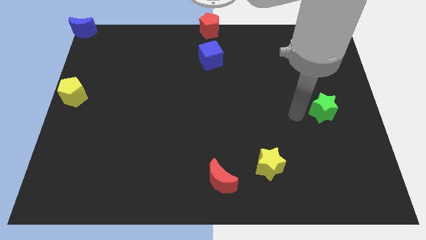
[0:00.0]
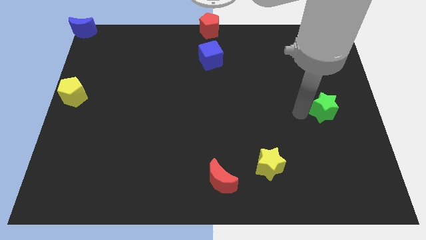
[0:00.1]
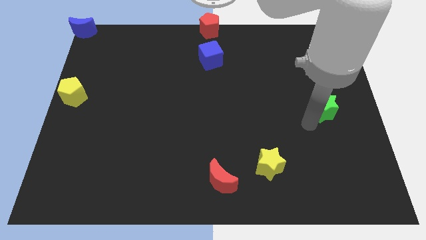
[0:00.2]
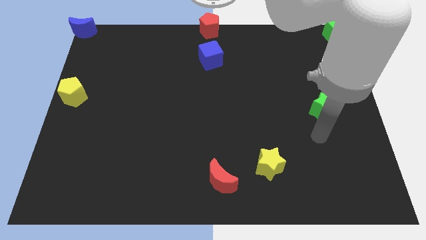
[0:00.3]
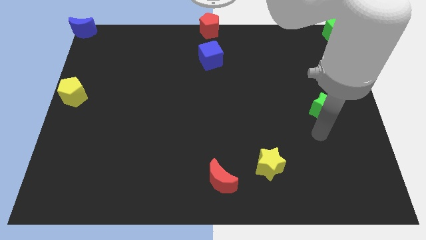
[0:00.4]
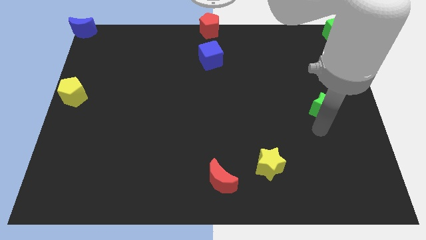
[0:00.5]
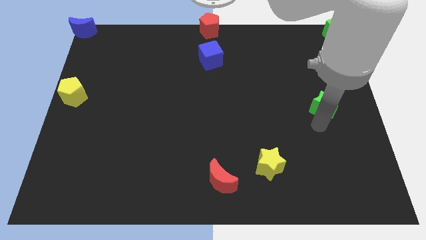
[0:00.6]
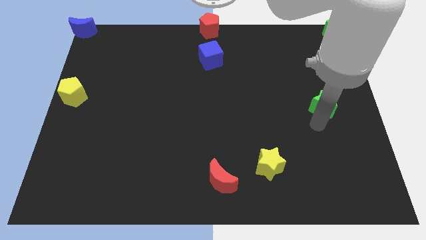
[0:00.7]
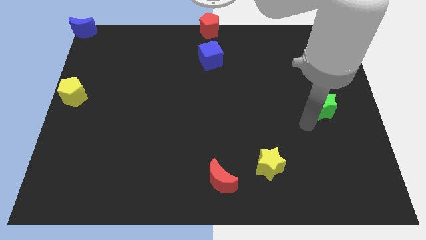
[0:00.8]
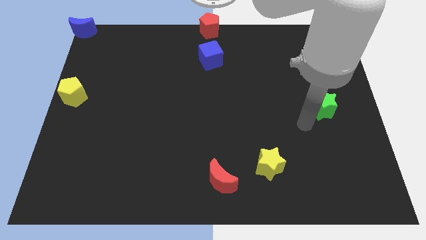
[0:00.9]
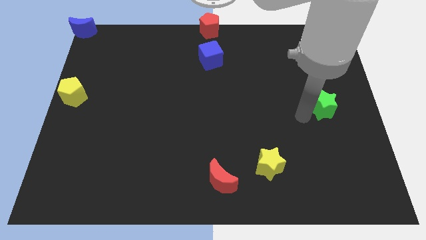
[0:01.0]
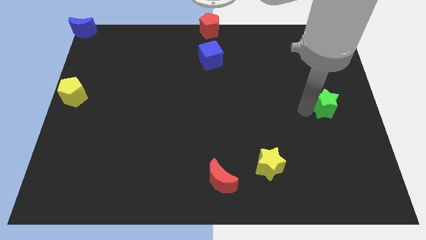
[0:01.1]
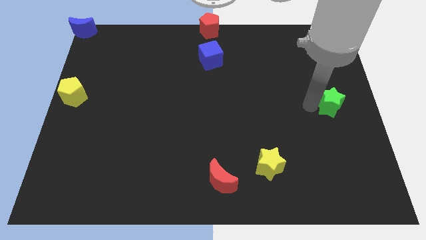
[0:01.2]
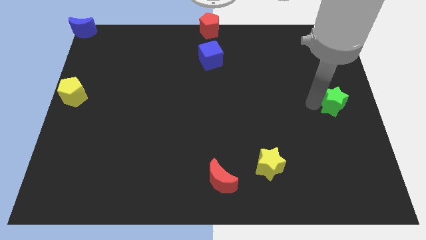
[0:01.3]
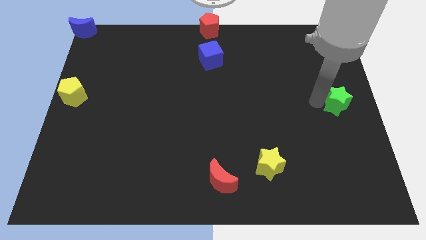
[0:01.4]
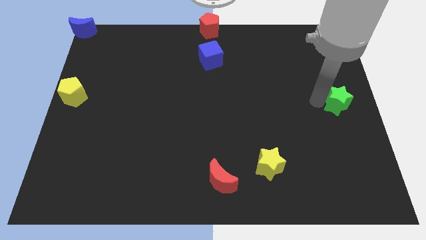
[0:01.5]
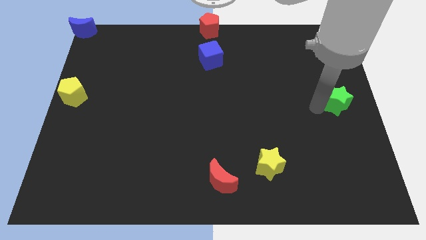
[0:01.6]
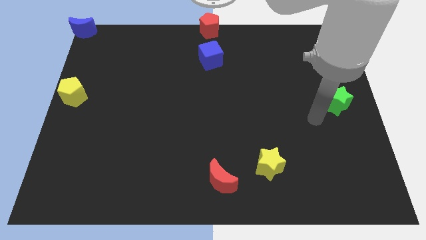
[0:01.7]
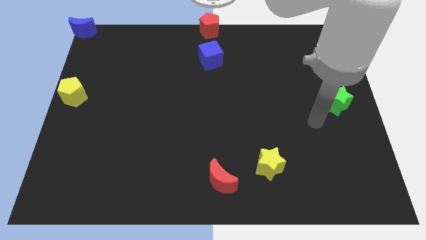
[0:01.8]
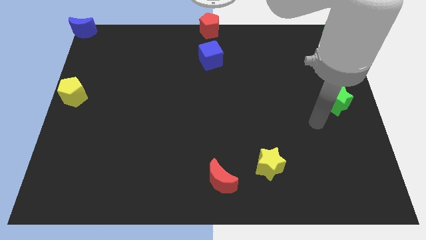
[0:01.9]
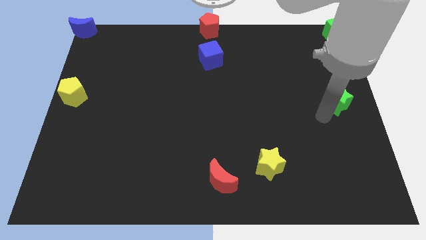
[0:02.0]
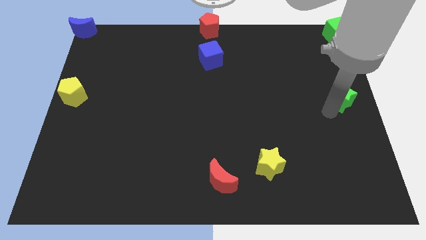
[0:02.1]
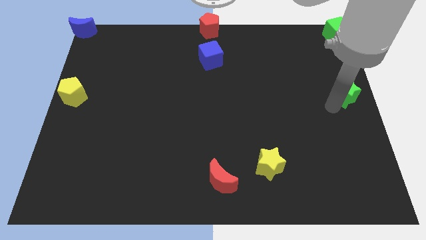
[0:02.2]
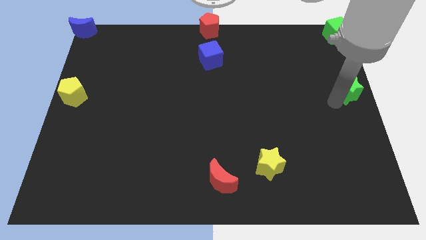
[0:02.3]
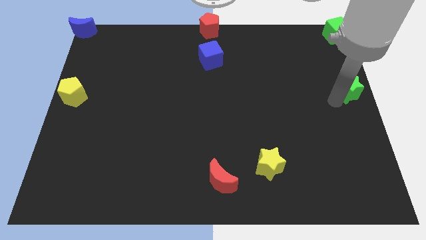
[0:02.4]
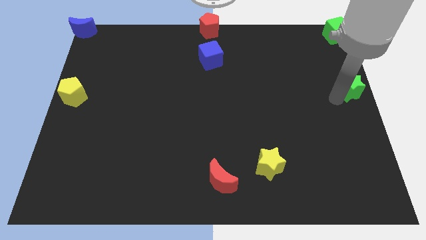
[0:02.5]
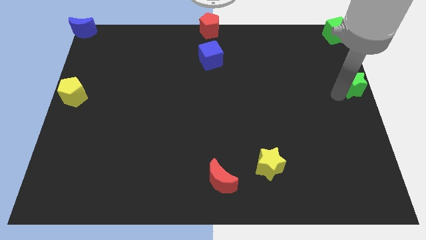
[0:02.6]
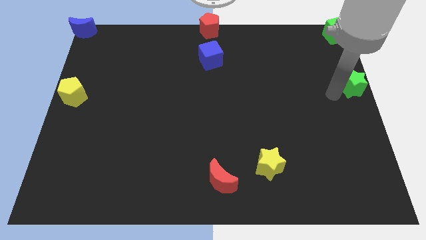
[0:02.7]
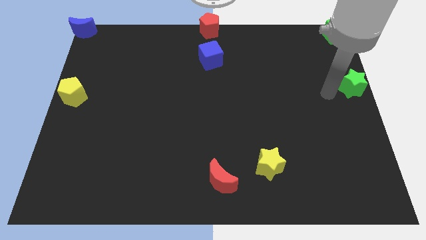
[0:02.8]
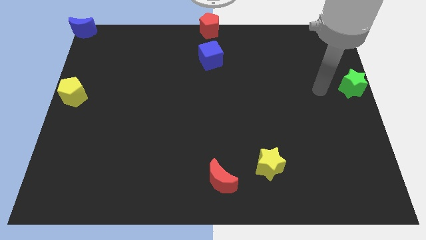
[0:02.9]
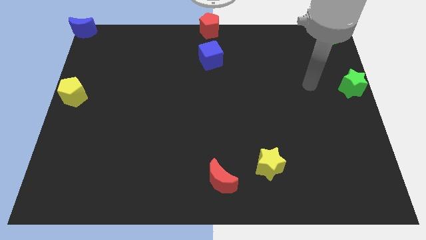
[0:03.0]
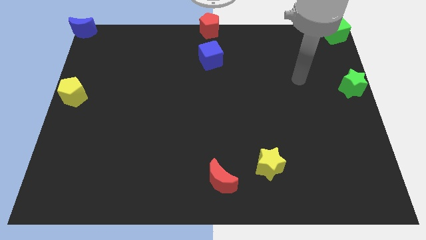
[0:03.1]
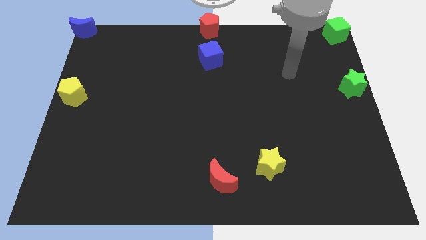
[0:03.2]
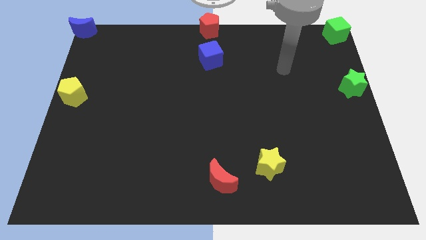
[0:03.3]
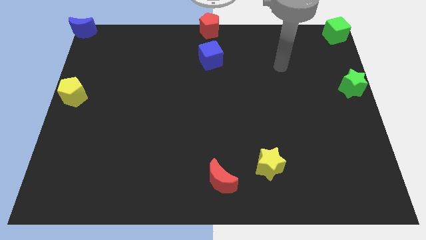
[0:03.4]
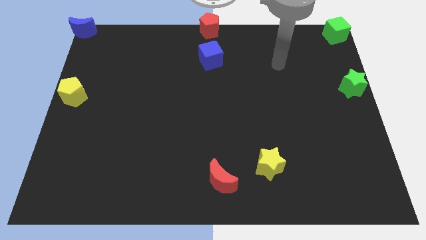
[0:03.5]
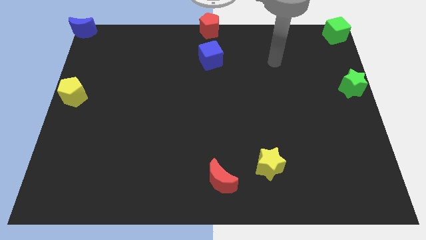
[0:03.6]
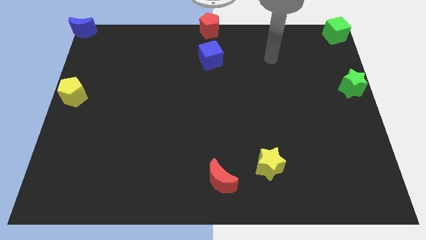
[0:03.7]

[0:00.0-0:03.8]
move the green star below to the green cube

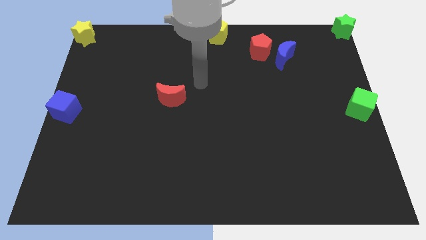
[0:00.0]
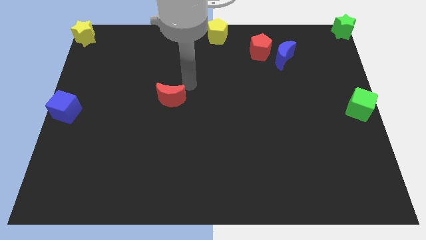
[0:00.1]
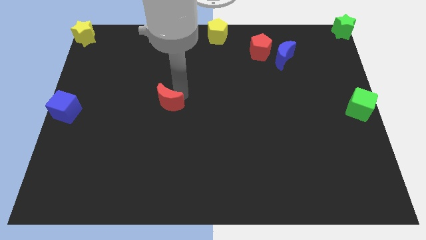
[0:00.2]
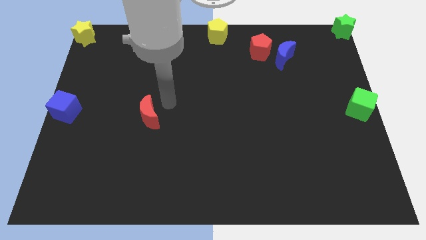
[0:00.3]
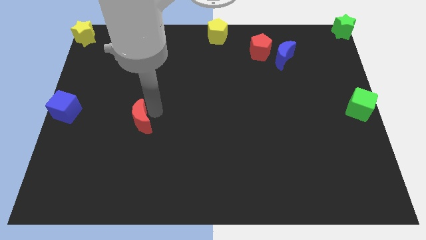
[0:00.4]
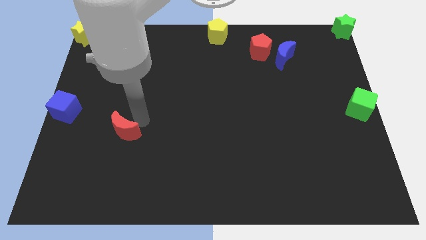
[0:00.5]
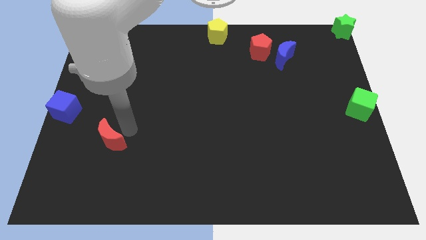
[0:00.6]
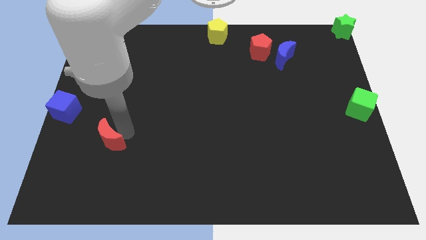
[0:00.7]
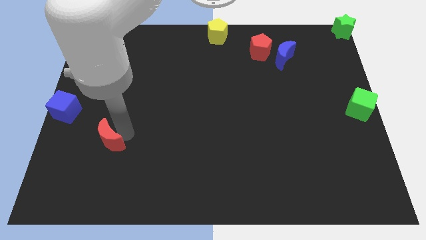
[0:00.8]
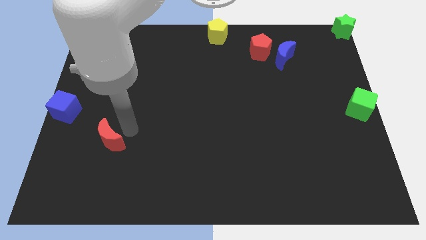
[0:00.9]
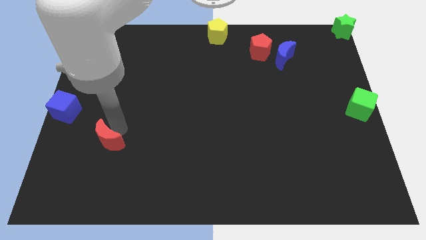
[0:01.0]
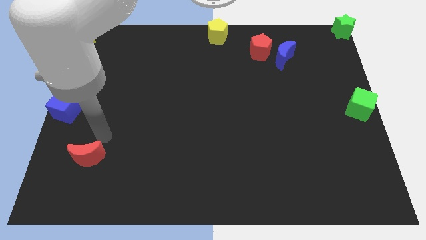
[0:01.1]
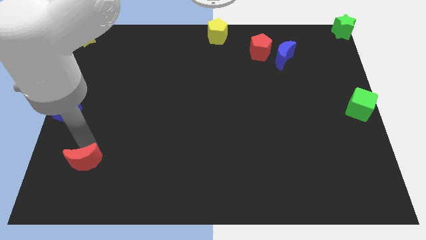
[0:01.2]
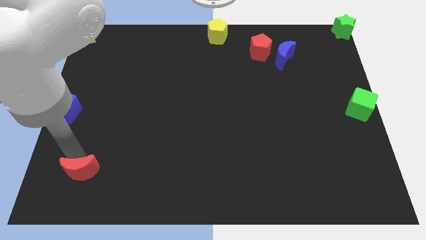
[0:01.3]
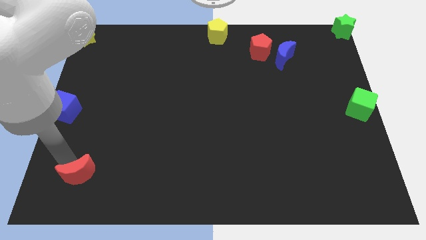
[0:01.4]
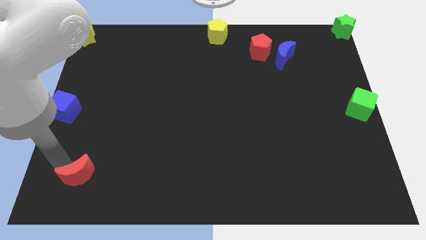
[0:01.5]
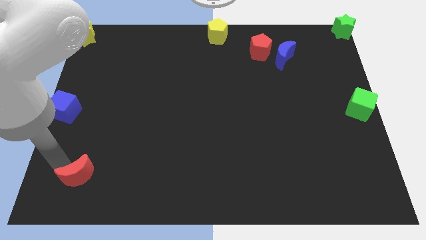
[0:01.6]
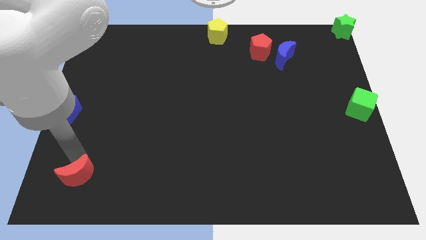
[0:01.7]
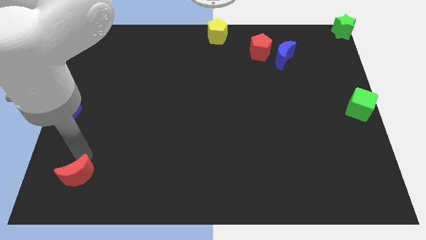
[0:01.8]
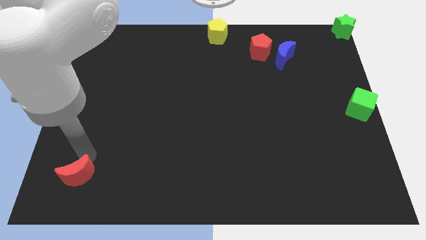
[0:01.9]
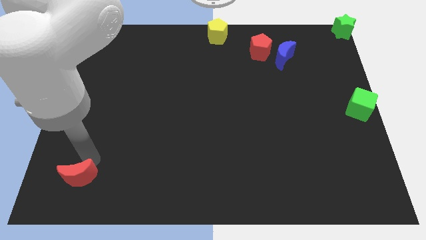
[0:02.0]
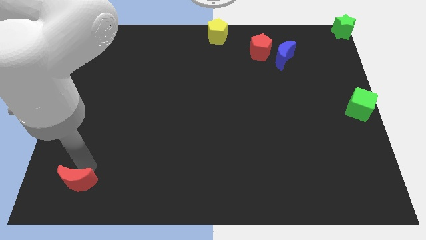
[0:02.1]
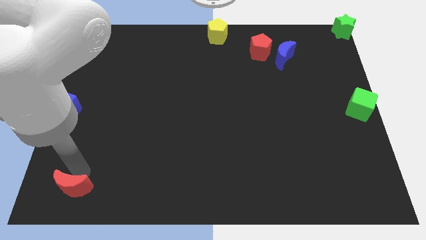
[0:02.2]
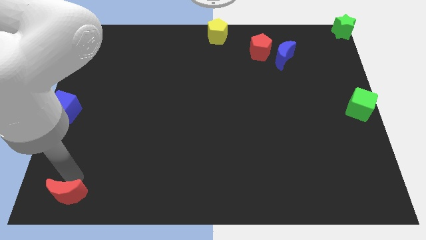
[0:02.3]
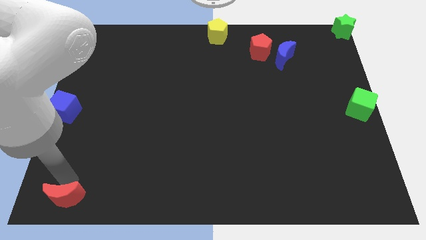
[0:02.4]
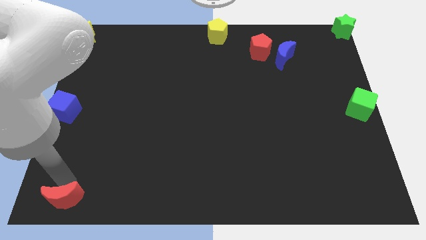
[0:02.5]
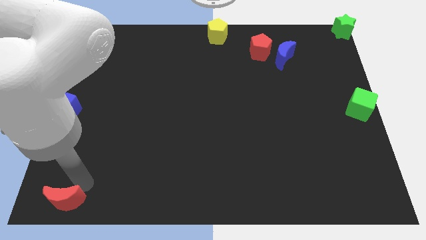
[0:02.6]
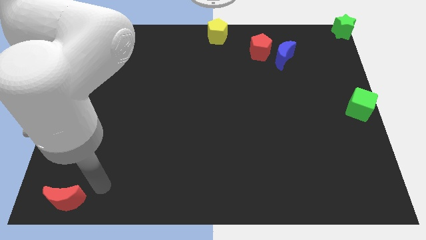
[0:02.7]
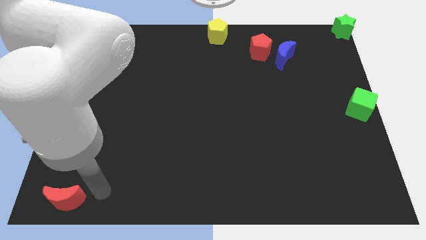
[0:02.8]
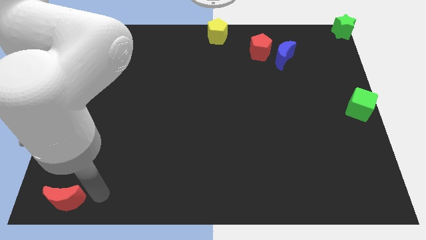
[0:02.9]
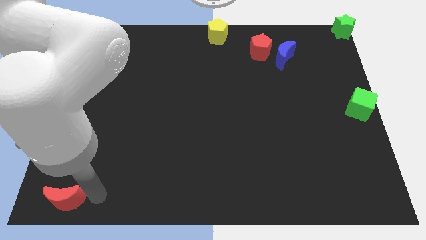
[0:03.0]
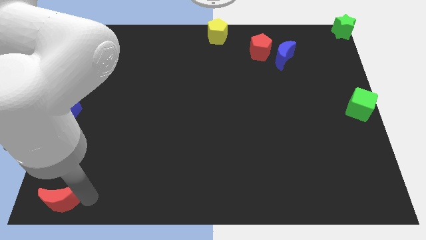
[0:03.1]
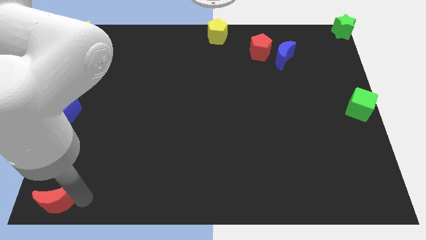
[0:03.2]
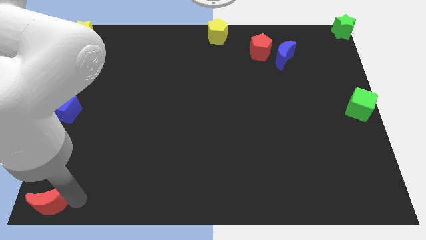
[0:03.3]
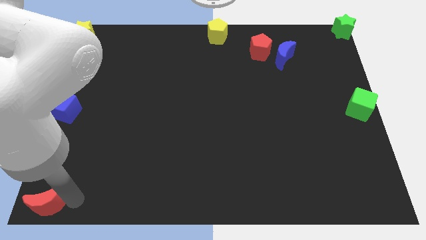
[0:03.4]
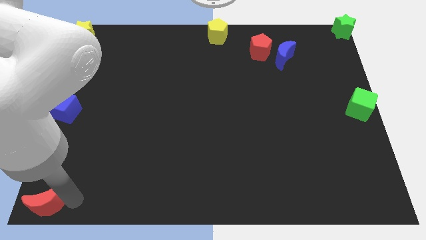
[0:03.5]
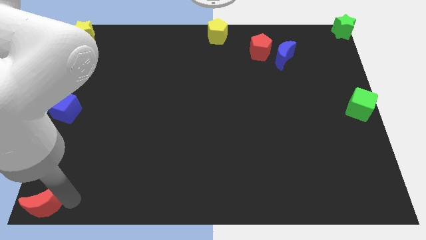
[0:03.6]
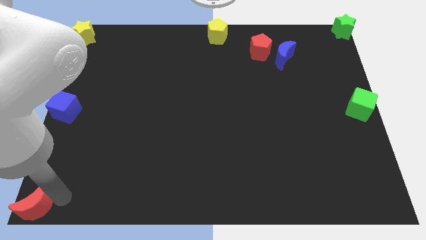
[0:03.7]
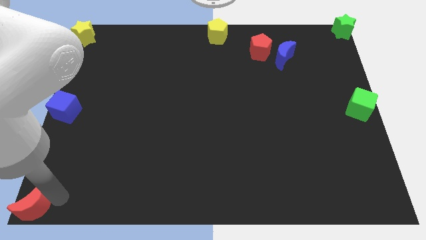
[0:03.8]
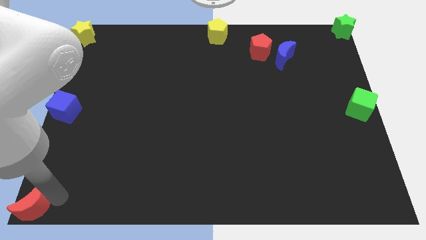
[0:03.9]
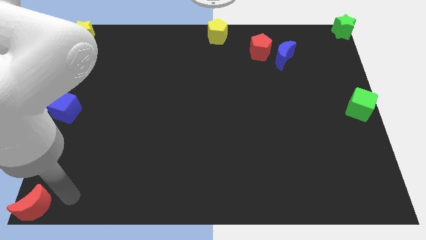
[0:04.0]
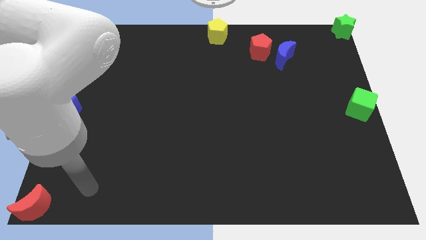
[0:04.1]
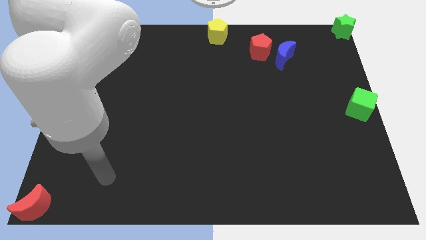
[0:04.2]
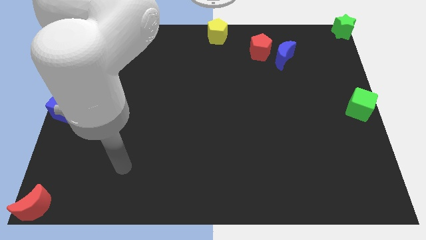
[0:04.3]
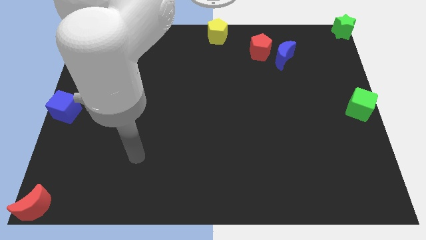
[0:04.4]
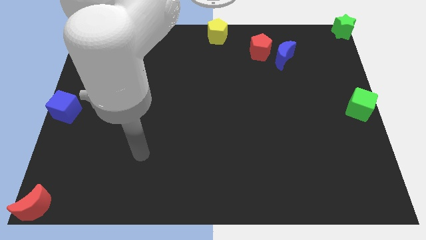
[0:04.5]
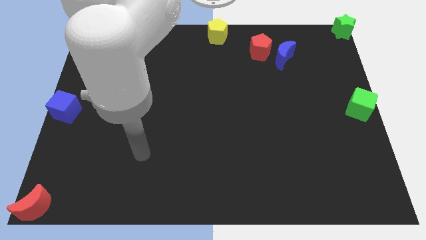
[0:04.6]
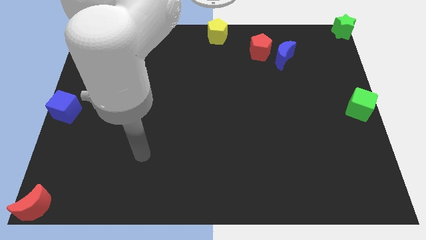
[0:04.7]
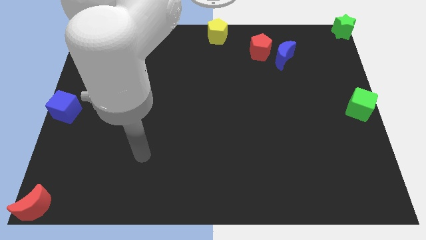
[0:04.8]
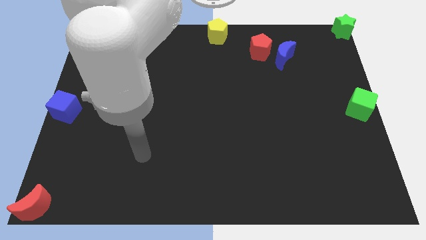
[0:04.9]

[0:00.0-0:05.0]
slide the red crescent to the bottom left corner of the board
